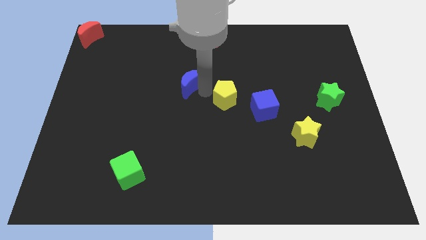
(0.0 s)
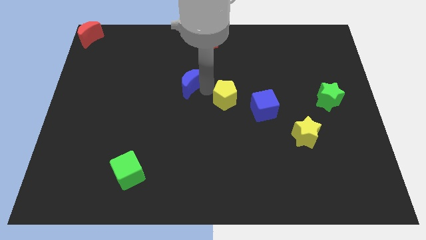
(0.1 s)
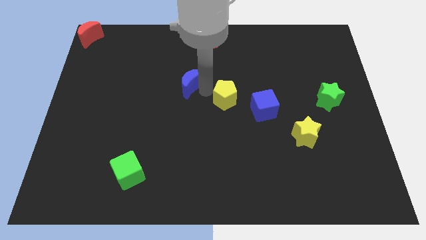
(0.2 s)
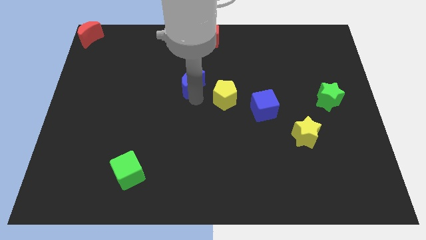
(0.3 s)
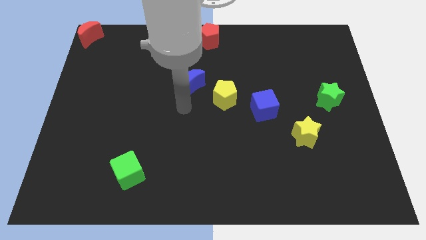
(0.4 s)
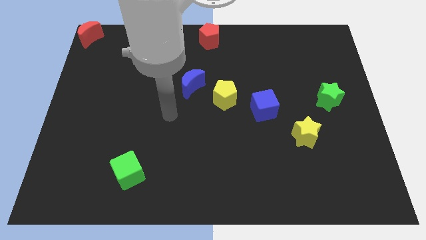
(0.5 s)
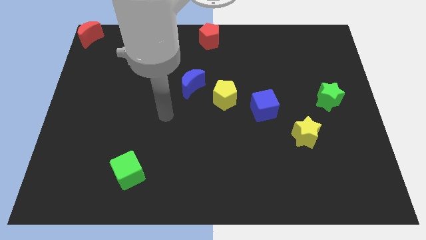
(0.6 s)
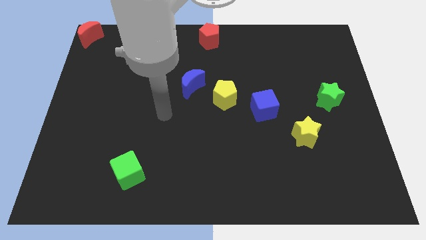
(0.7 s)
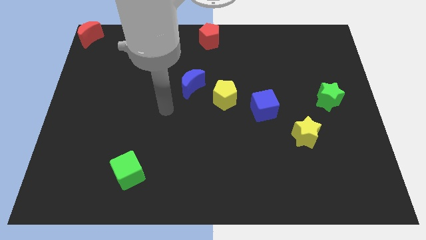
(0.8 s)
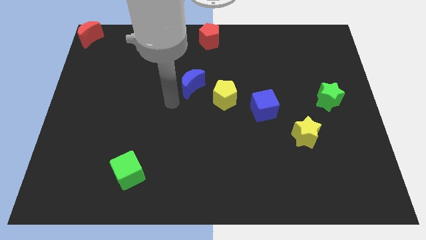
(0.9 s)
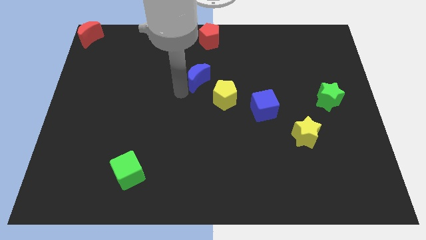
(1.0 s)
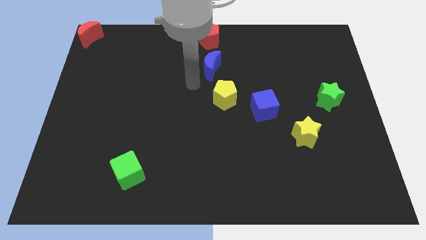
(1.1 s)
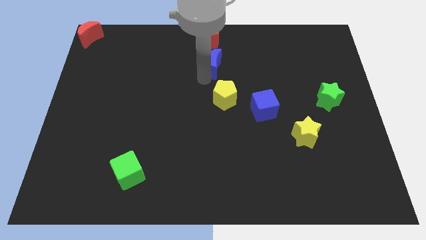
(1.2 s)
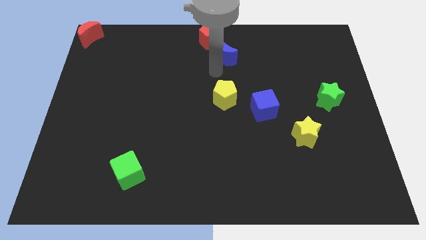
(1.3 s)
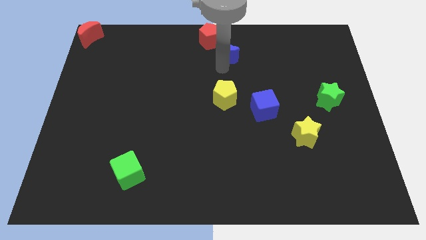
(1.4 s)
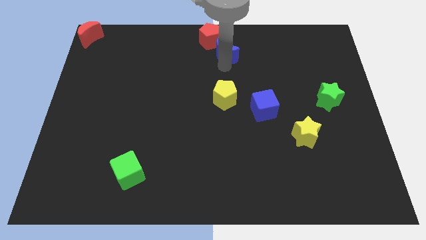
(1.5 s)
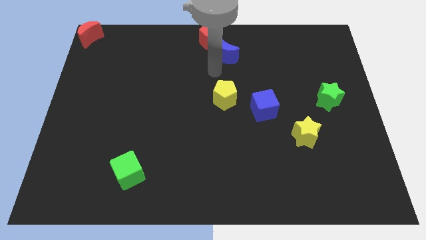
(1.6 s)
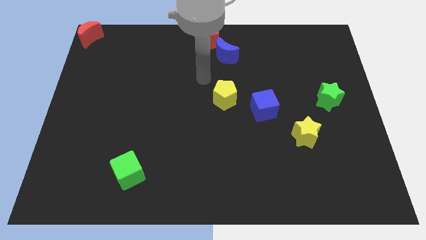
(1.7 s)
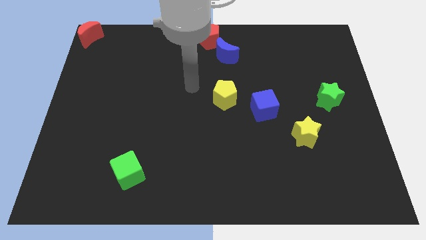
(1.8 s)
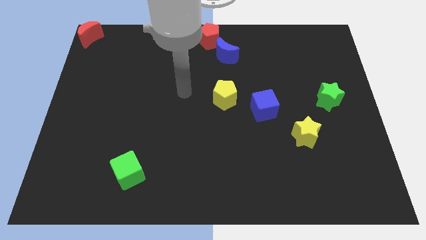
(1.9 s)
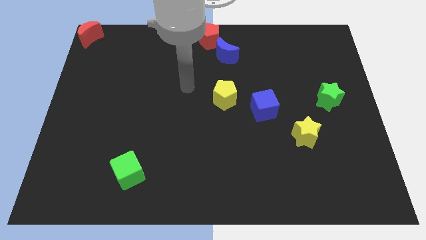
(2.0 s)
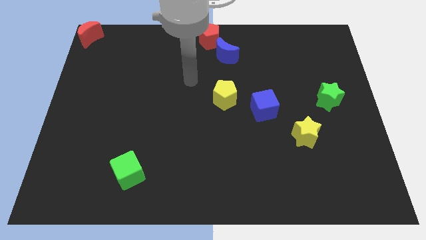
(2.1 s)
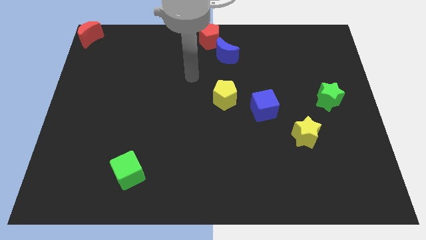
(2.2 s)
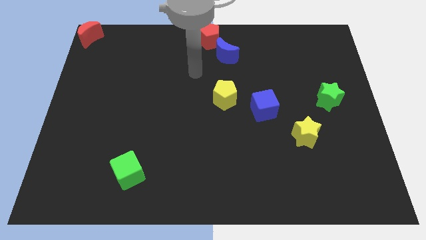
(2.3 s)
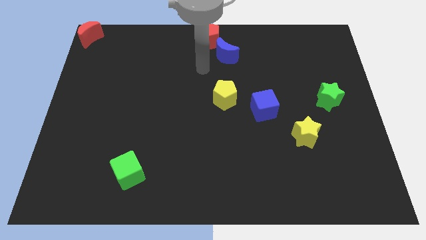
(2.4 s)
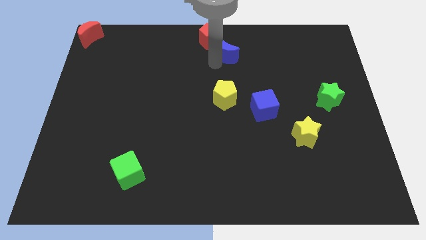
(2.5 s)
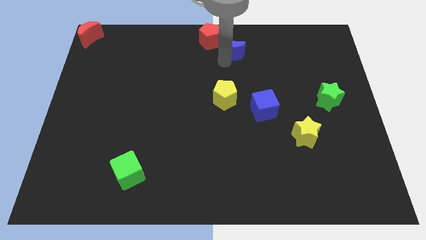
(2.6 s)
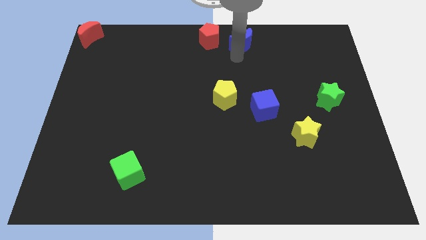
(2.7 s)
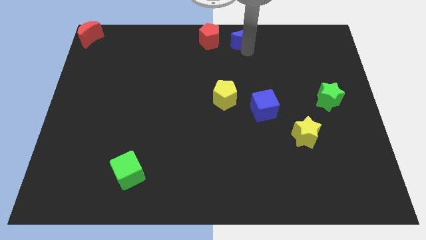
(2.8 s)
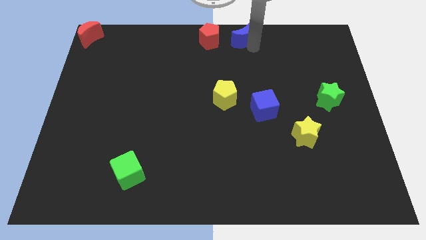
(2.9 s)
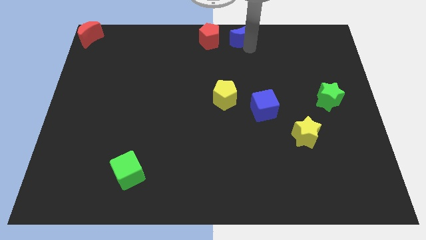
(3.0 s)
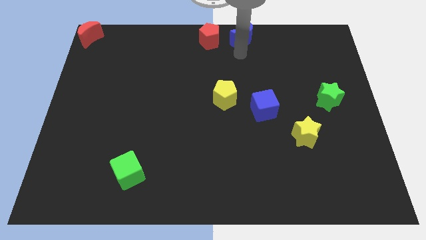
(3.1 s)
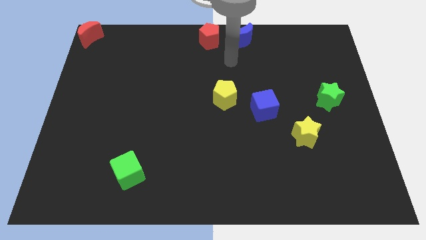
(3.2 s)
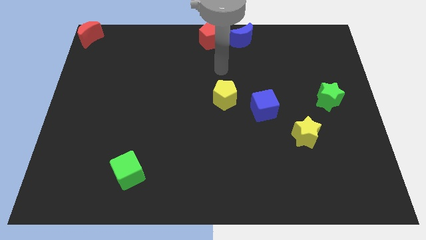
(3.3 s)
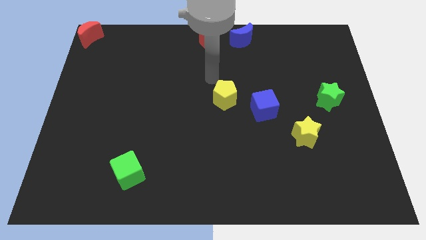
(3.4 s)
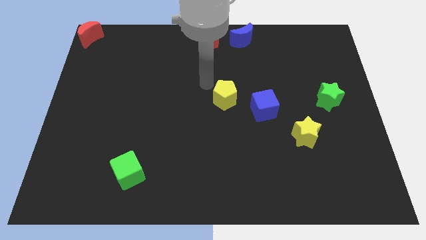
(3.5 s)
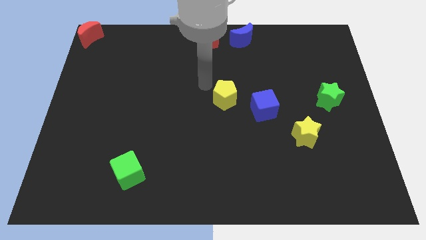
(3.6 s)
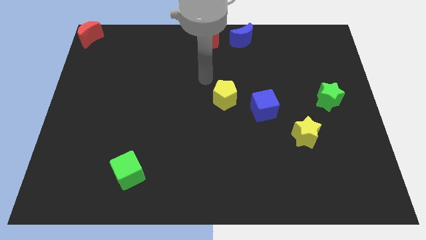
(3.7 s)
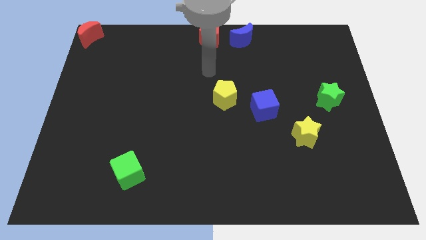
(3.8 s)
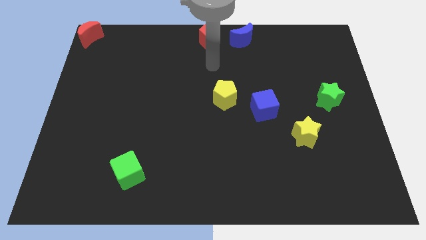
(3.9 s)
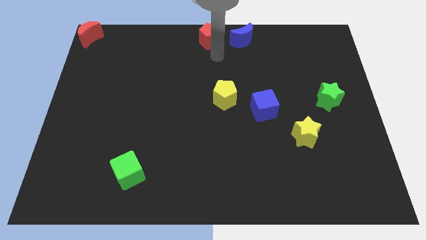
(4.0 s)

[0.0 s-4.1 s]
place the blue moon to the right of the red pentagon

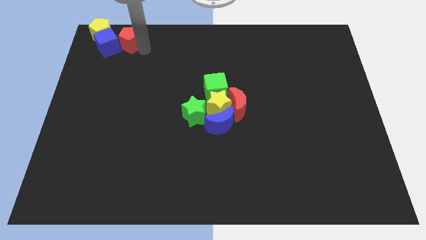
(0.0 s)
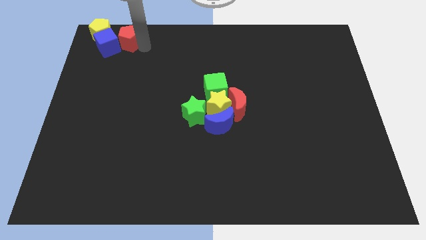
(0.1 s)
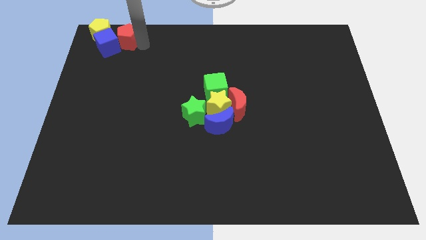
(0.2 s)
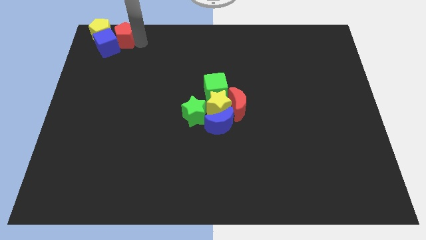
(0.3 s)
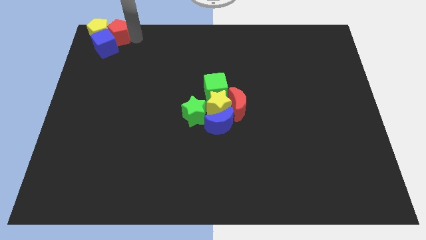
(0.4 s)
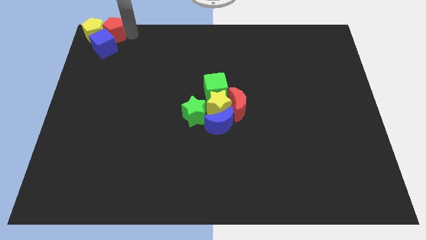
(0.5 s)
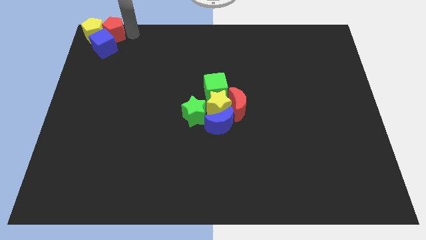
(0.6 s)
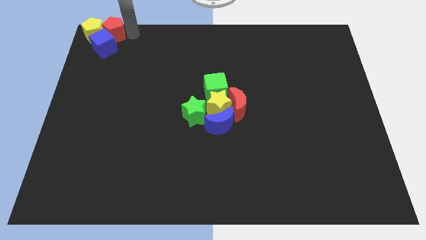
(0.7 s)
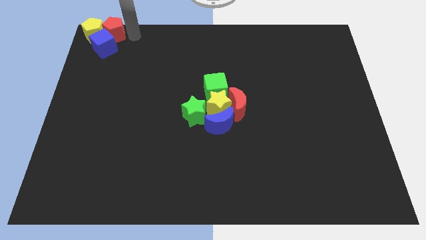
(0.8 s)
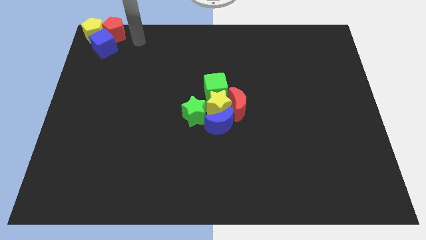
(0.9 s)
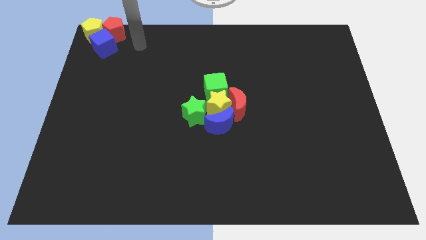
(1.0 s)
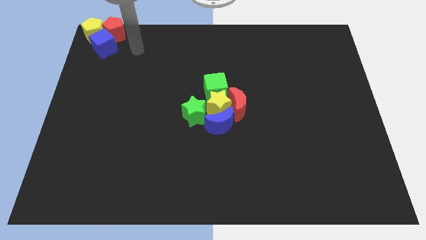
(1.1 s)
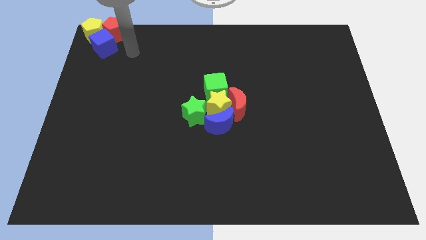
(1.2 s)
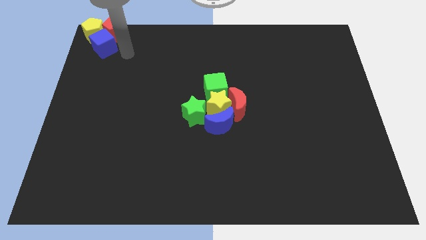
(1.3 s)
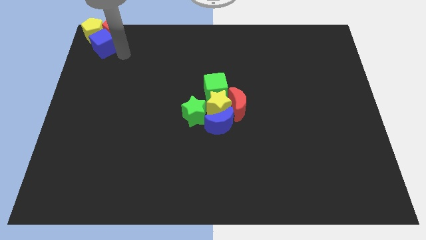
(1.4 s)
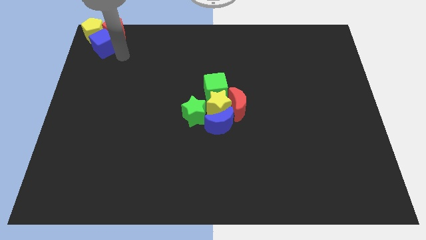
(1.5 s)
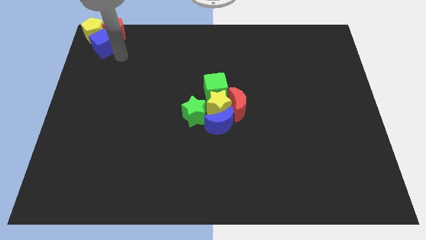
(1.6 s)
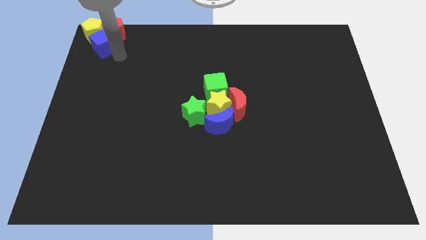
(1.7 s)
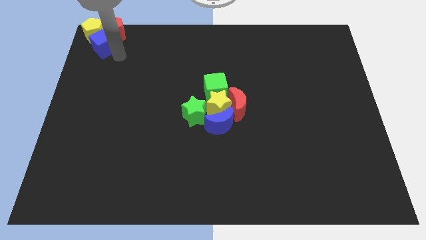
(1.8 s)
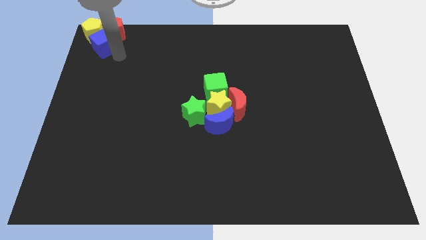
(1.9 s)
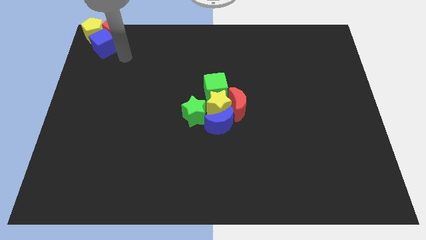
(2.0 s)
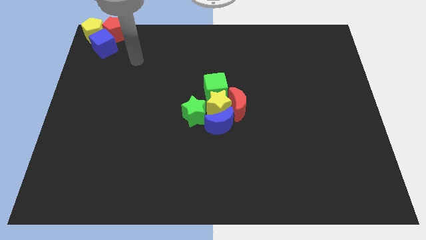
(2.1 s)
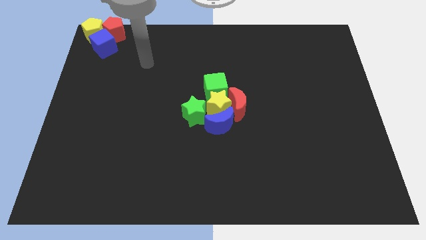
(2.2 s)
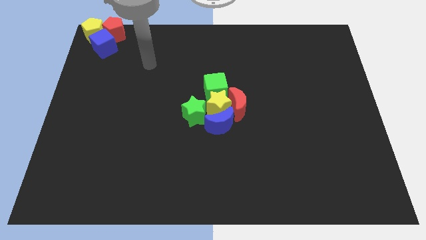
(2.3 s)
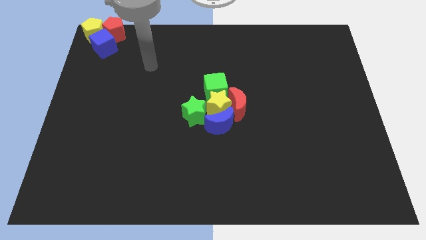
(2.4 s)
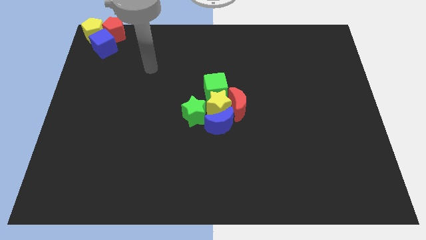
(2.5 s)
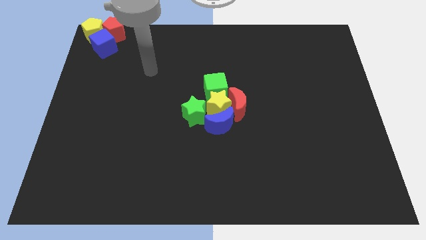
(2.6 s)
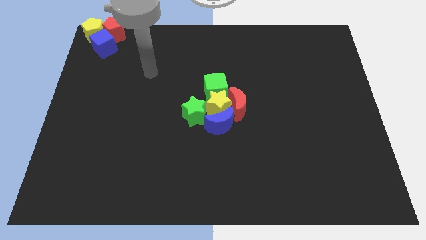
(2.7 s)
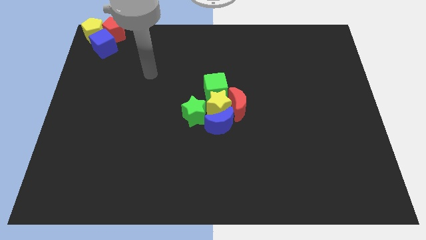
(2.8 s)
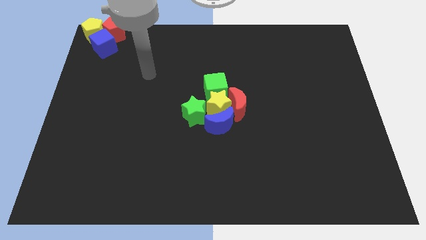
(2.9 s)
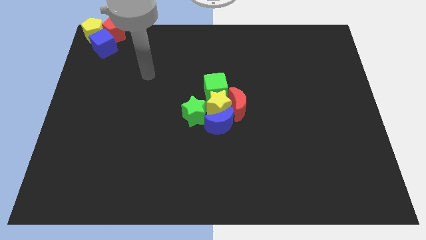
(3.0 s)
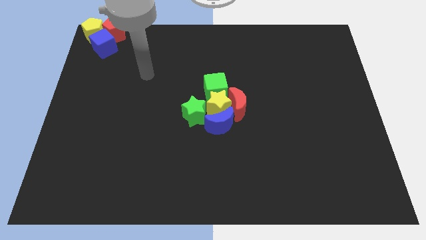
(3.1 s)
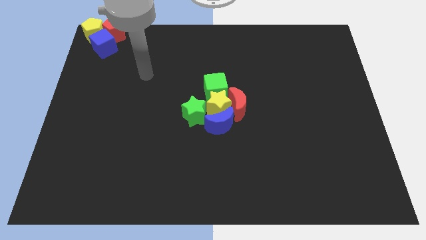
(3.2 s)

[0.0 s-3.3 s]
move your arm away from the red pentagon

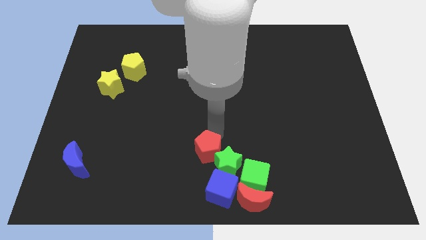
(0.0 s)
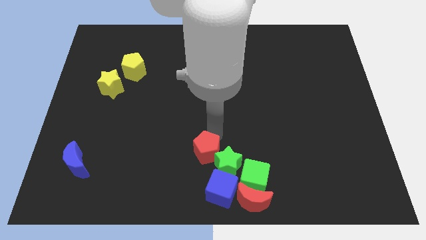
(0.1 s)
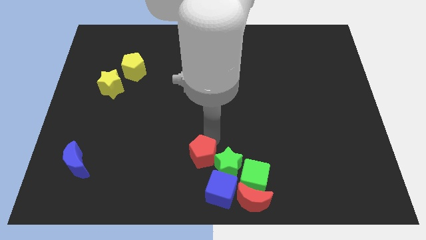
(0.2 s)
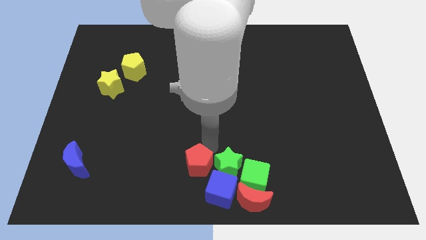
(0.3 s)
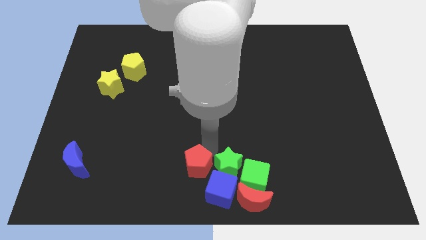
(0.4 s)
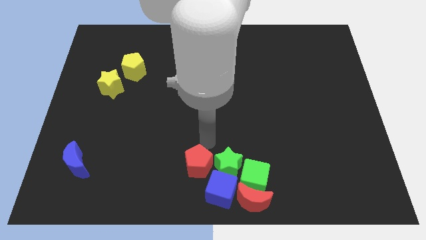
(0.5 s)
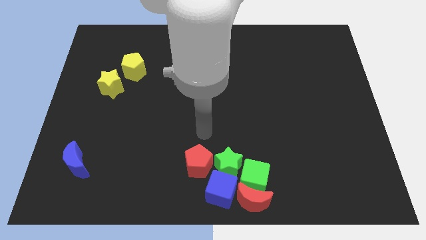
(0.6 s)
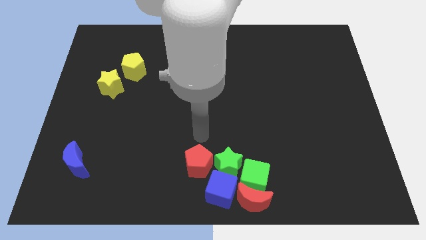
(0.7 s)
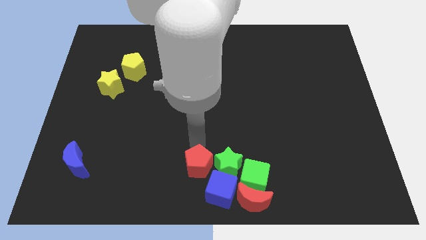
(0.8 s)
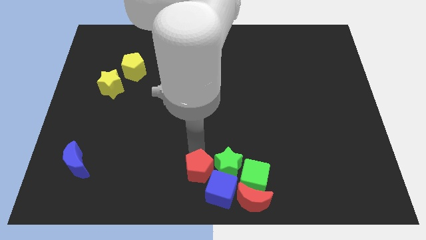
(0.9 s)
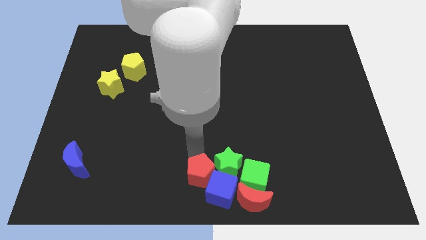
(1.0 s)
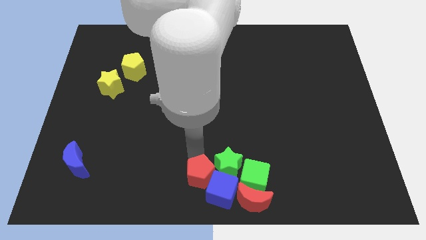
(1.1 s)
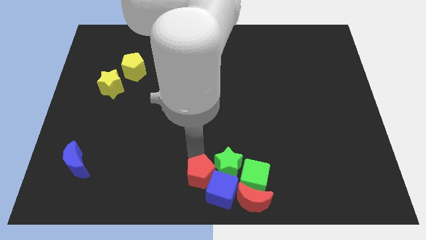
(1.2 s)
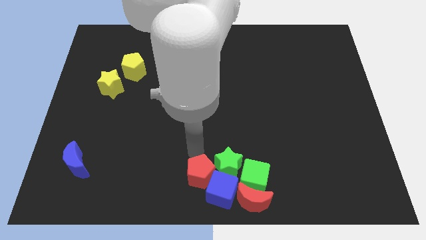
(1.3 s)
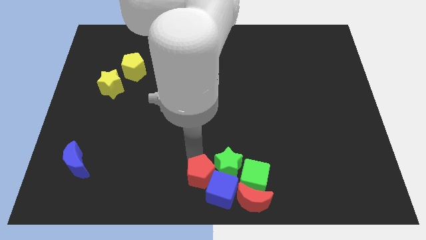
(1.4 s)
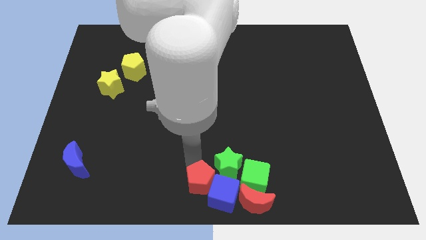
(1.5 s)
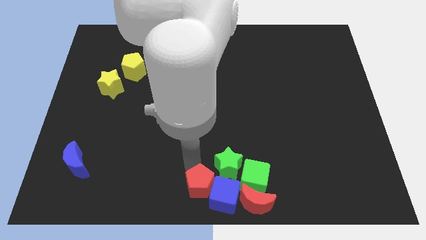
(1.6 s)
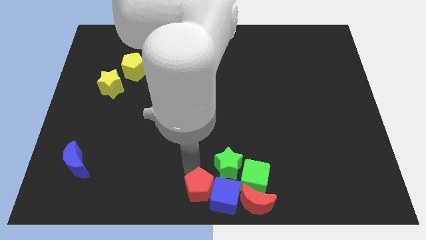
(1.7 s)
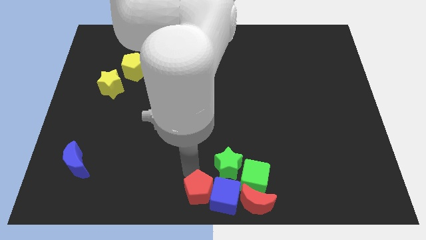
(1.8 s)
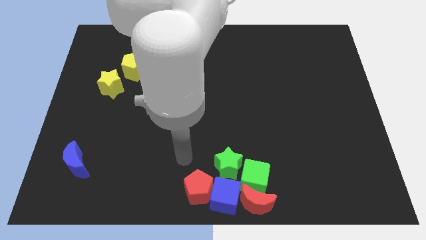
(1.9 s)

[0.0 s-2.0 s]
move the red block to the left side of the blue cube
